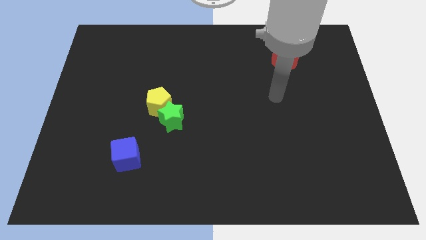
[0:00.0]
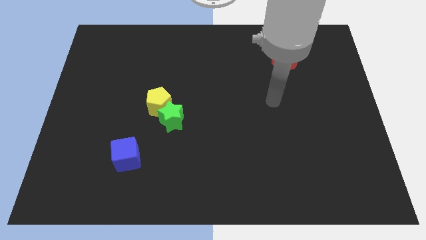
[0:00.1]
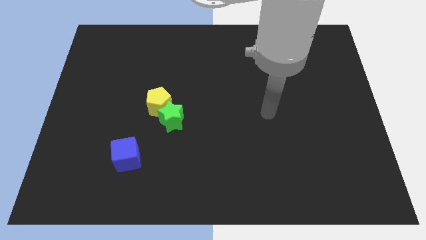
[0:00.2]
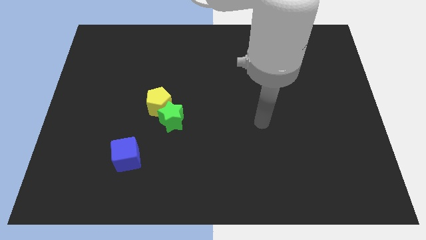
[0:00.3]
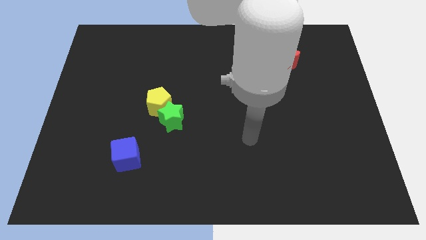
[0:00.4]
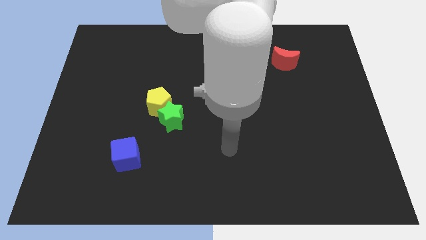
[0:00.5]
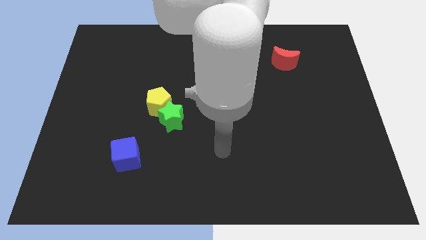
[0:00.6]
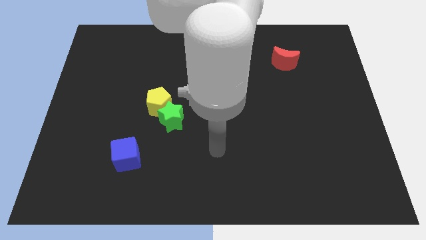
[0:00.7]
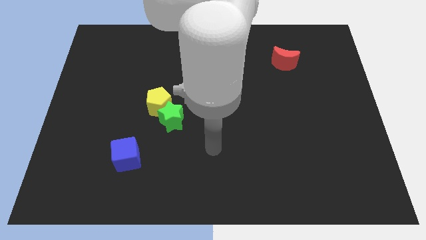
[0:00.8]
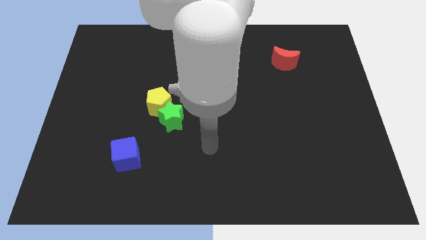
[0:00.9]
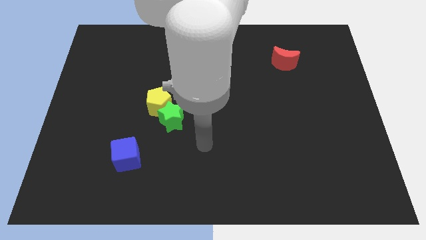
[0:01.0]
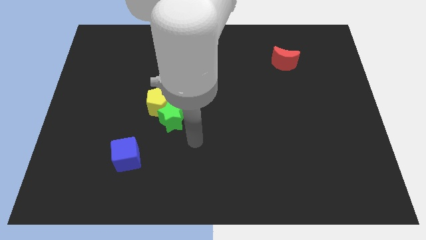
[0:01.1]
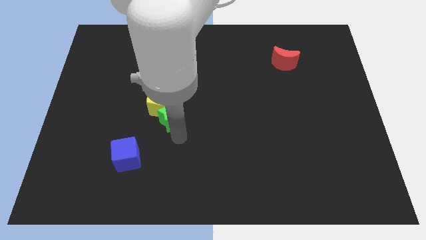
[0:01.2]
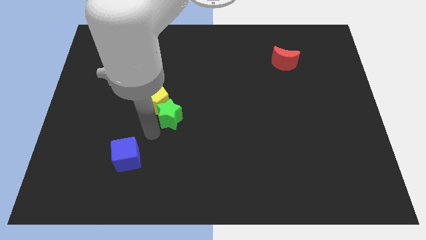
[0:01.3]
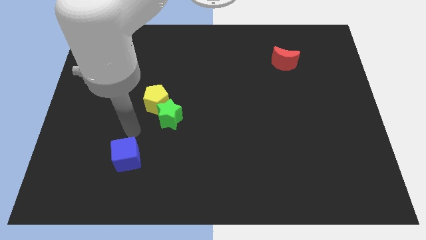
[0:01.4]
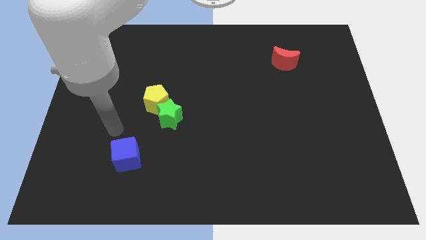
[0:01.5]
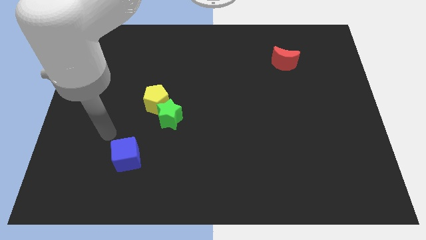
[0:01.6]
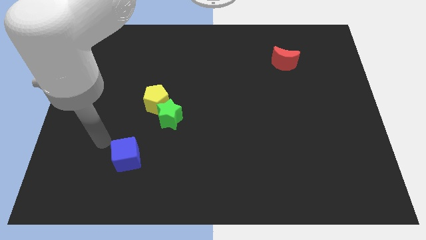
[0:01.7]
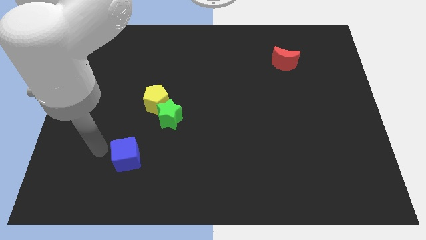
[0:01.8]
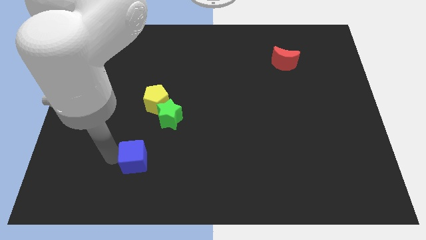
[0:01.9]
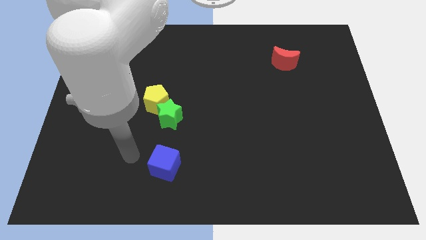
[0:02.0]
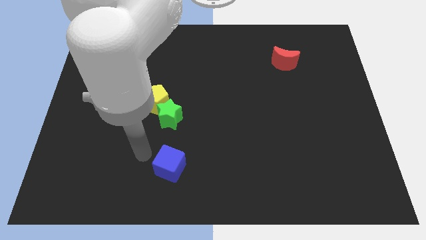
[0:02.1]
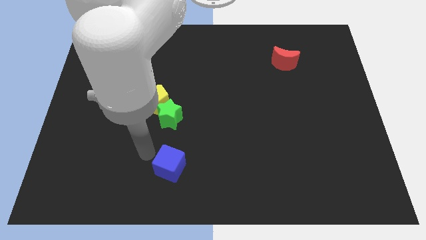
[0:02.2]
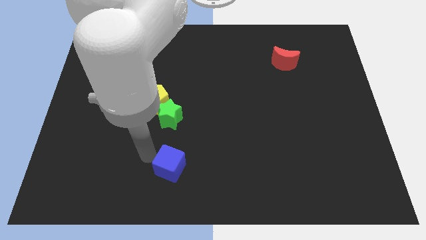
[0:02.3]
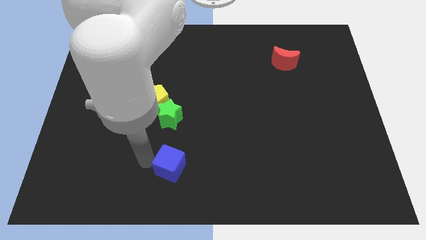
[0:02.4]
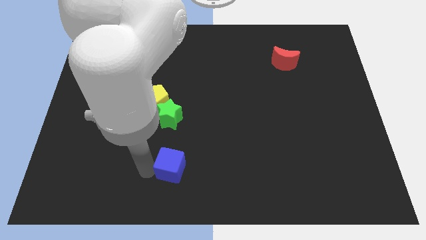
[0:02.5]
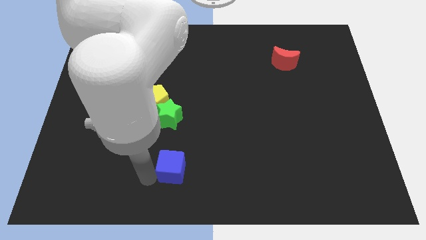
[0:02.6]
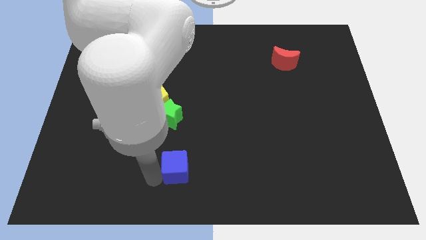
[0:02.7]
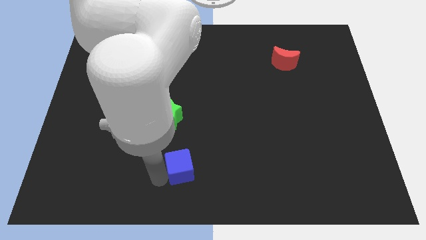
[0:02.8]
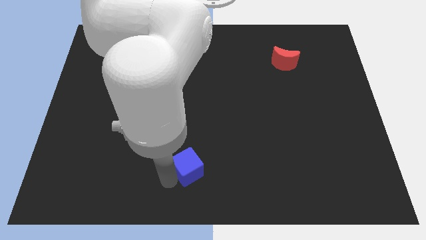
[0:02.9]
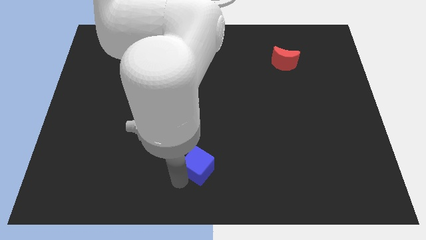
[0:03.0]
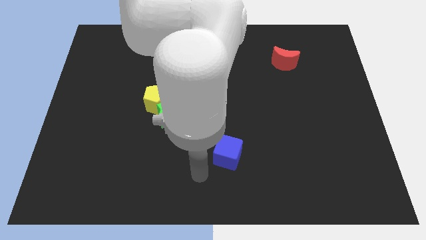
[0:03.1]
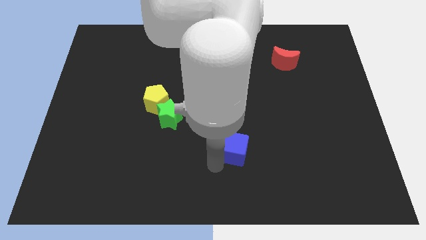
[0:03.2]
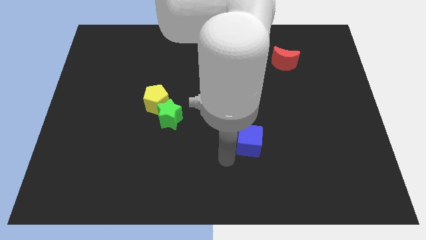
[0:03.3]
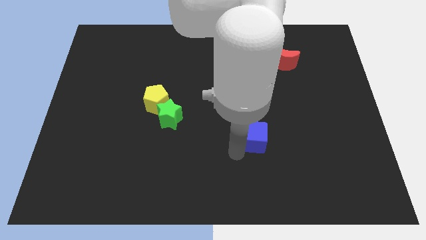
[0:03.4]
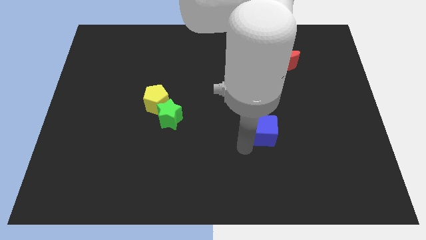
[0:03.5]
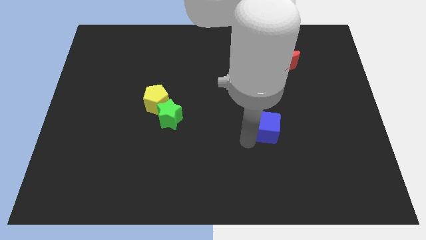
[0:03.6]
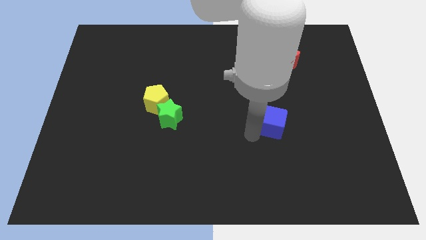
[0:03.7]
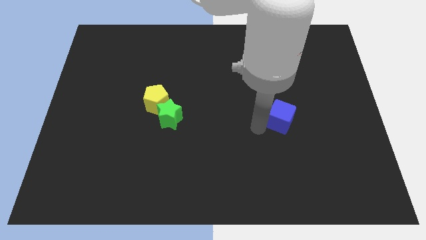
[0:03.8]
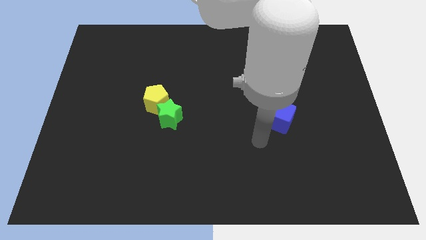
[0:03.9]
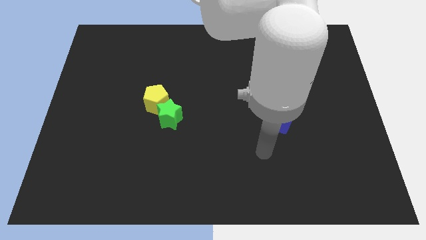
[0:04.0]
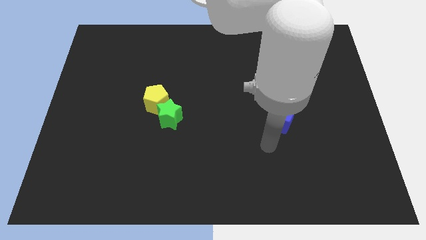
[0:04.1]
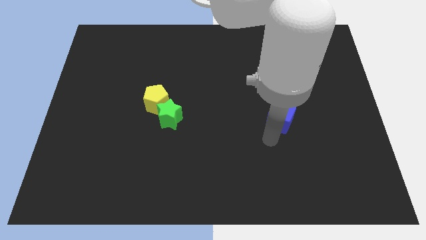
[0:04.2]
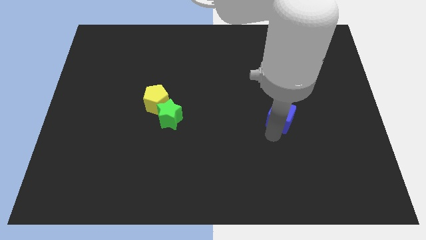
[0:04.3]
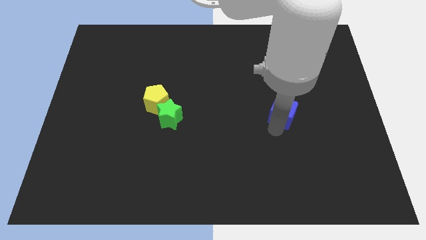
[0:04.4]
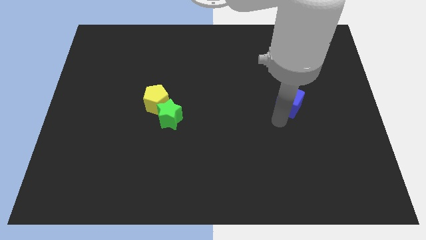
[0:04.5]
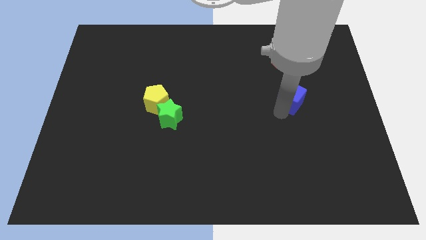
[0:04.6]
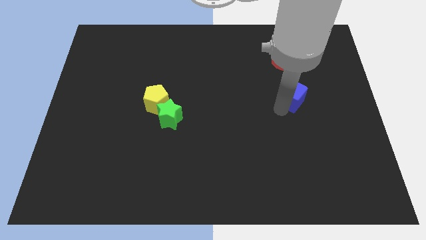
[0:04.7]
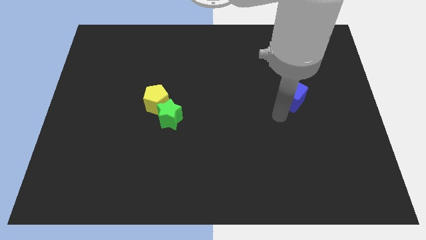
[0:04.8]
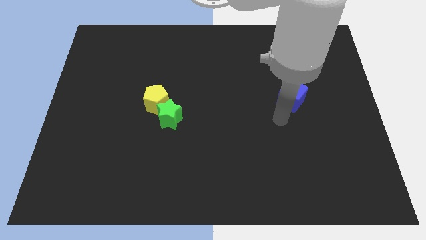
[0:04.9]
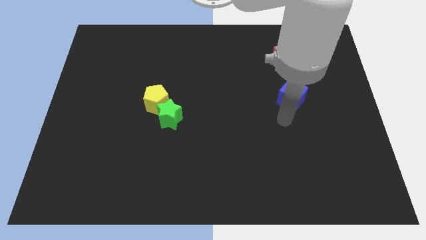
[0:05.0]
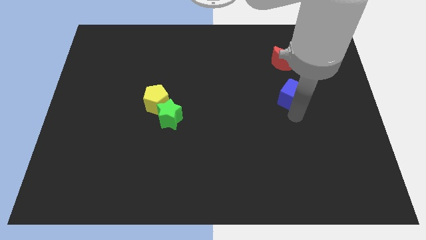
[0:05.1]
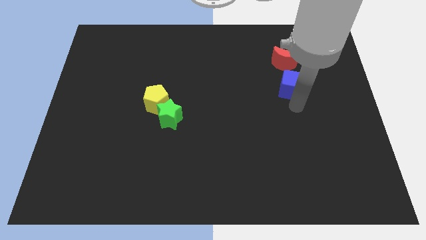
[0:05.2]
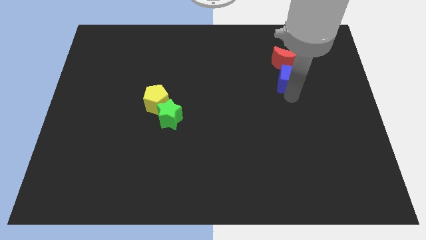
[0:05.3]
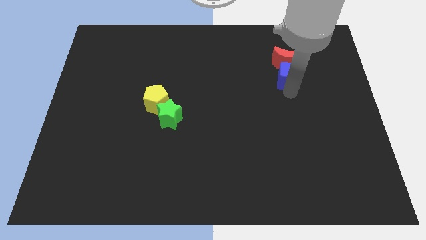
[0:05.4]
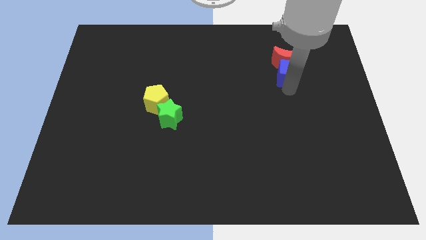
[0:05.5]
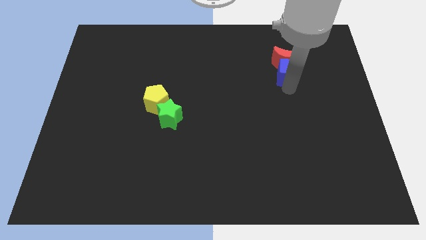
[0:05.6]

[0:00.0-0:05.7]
move the blue cube next to the red moon

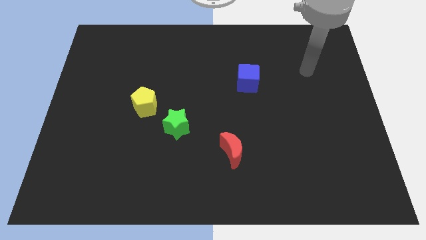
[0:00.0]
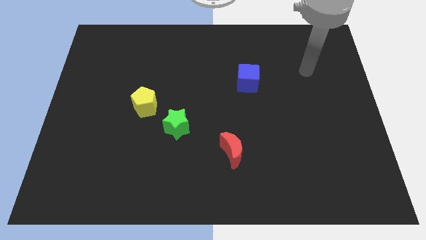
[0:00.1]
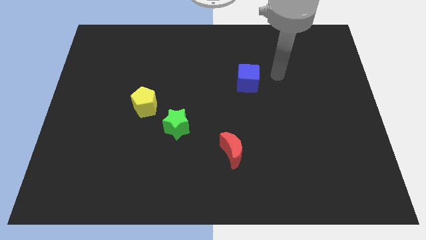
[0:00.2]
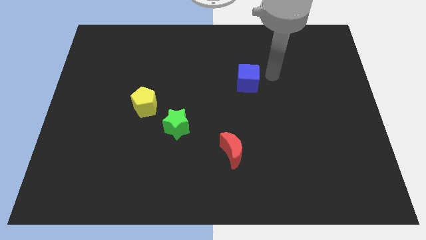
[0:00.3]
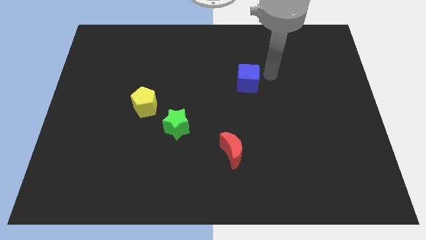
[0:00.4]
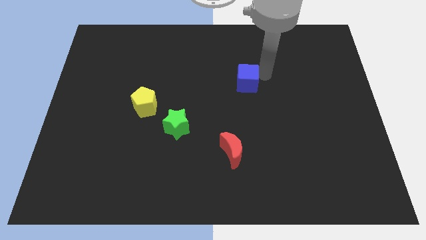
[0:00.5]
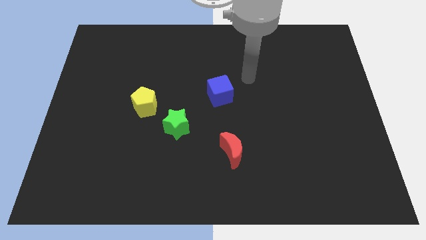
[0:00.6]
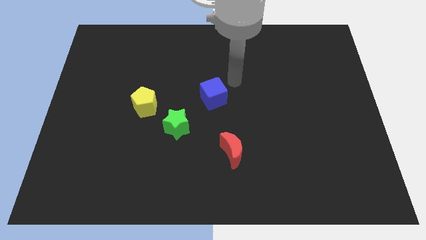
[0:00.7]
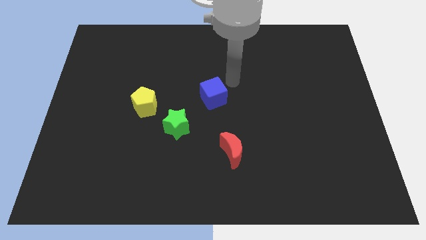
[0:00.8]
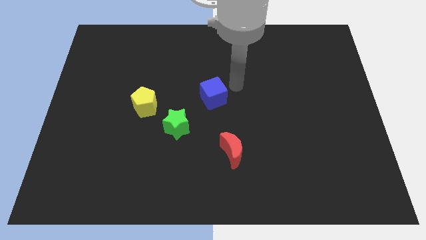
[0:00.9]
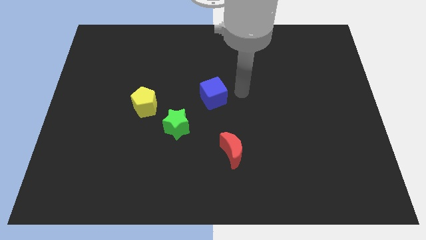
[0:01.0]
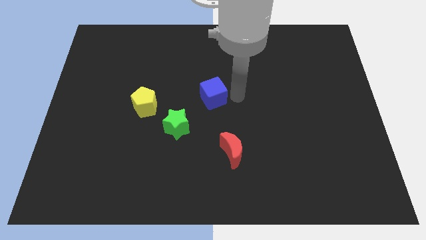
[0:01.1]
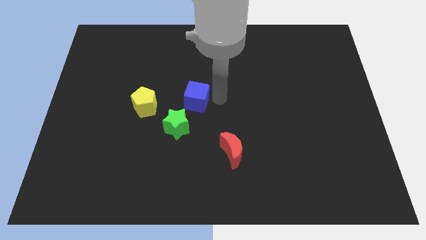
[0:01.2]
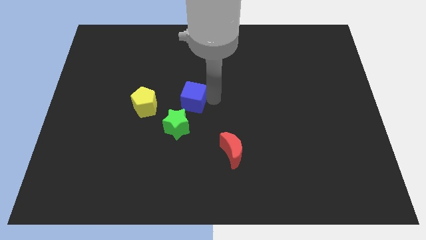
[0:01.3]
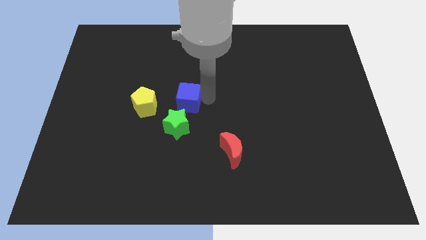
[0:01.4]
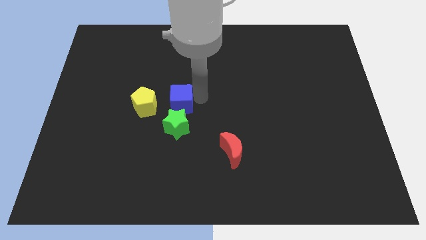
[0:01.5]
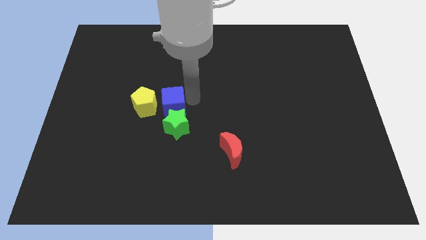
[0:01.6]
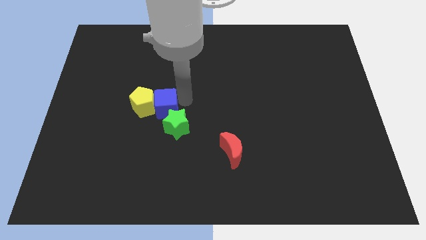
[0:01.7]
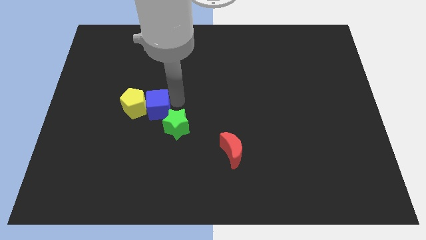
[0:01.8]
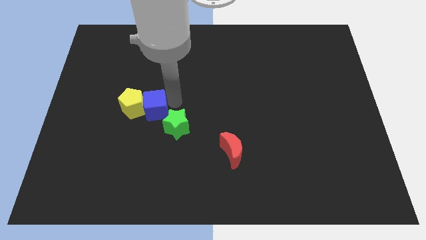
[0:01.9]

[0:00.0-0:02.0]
put the cube towards the yellow pentagon

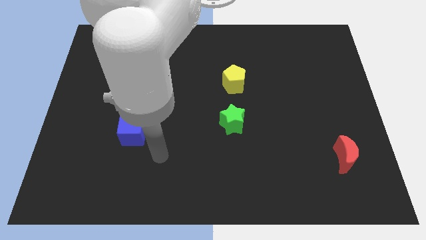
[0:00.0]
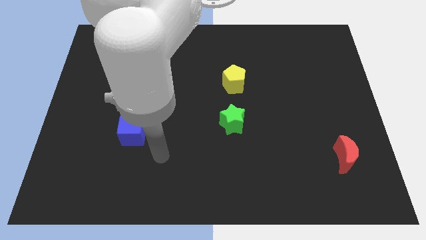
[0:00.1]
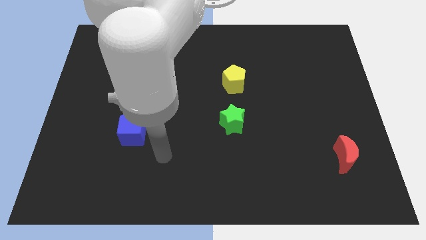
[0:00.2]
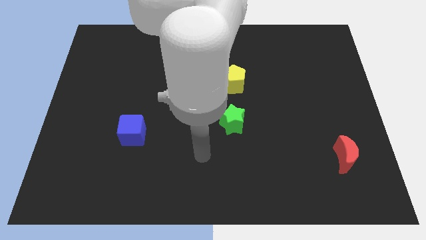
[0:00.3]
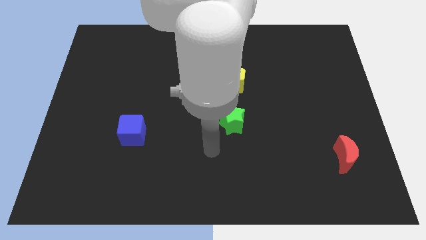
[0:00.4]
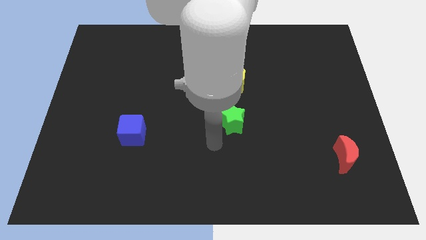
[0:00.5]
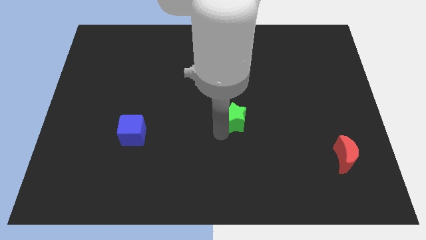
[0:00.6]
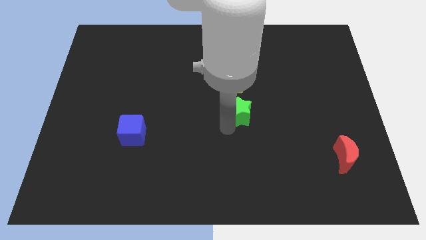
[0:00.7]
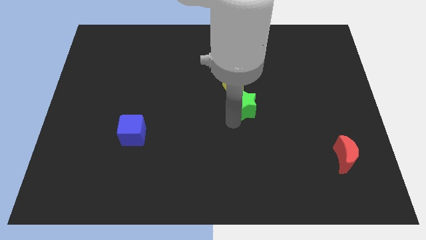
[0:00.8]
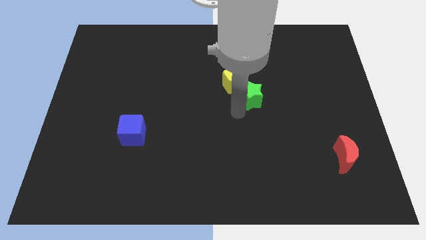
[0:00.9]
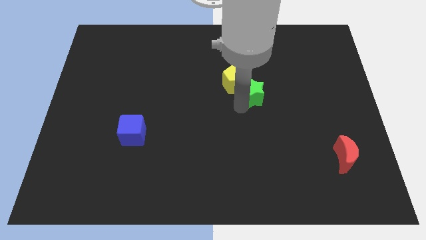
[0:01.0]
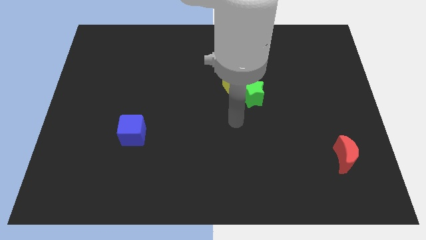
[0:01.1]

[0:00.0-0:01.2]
put the green block close to the yellow pentagon
